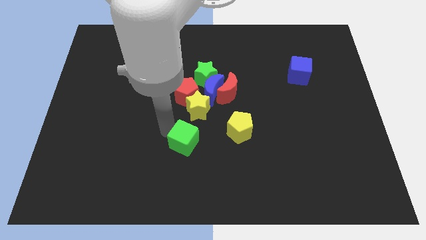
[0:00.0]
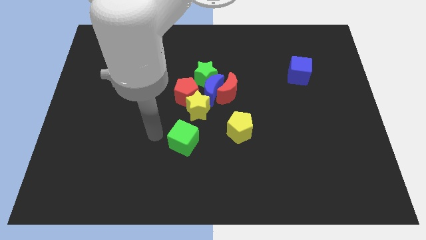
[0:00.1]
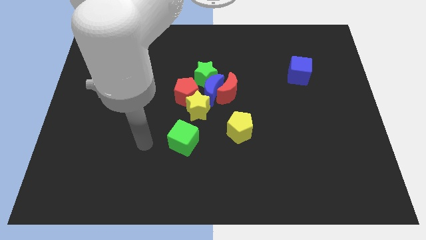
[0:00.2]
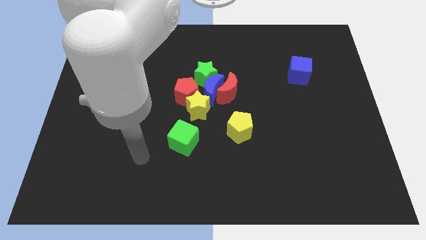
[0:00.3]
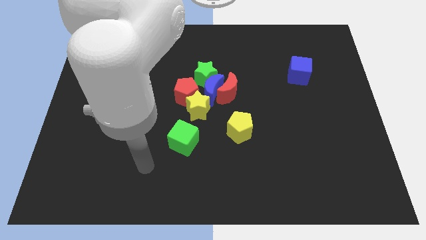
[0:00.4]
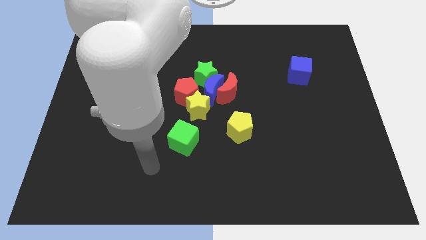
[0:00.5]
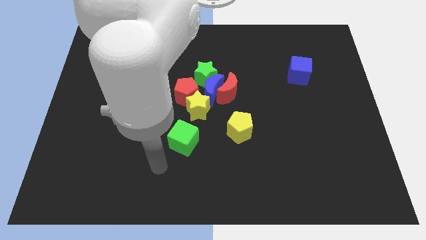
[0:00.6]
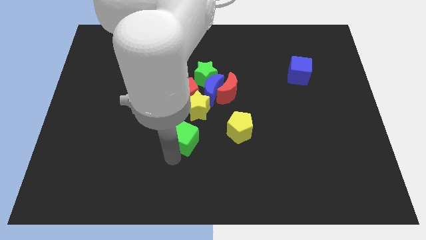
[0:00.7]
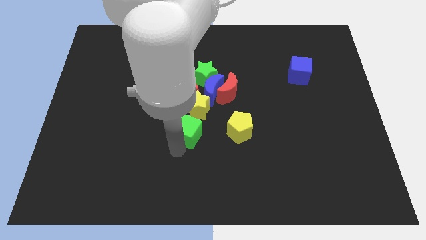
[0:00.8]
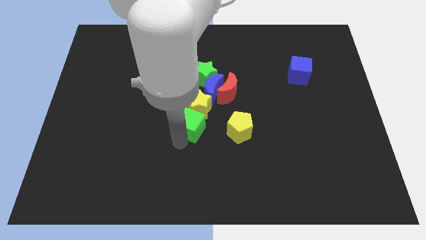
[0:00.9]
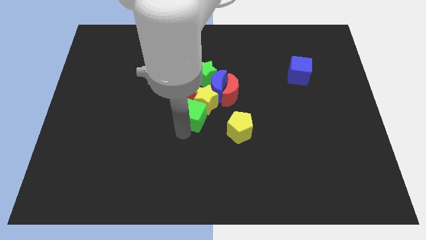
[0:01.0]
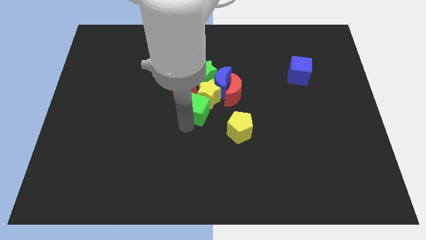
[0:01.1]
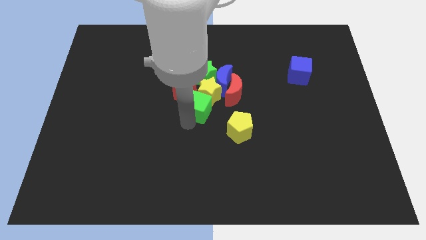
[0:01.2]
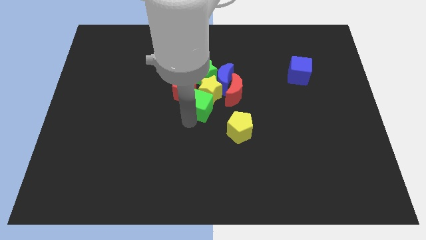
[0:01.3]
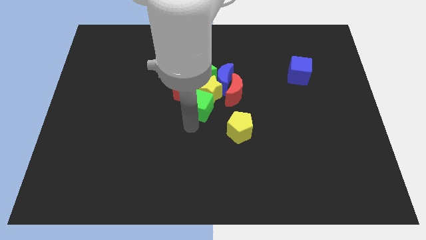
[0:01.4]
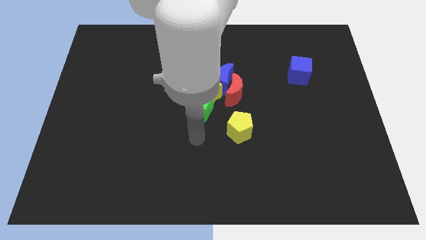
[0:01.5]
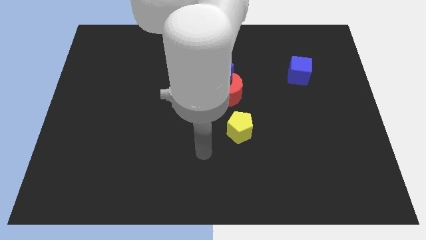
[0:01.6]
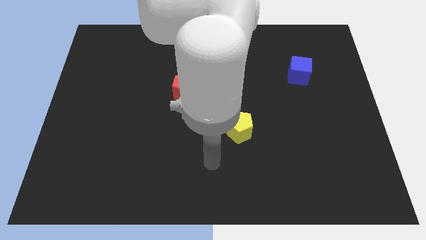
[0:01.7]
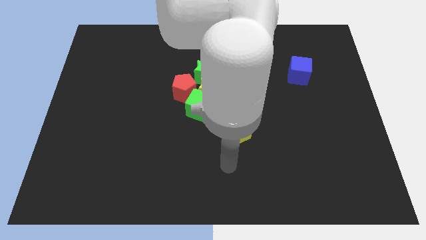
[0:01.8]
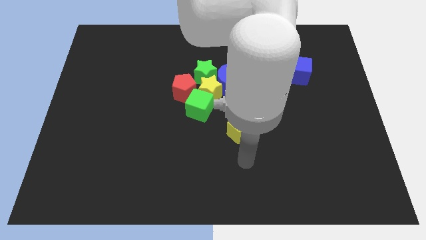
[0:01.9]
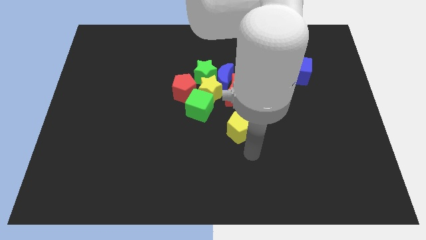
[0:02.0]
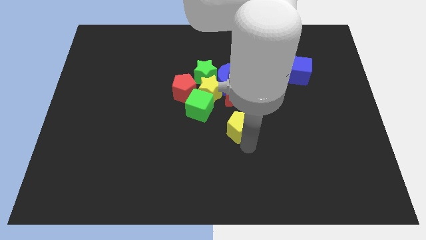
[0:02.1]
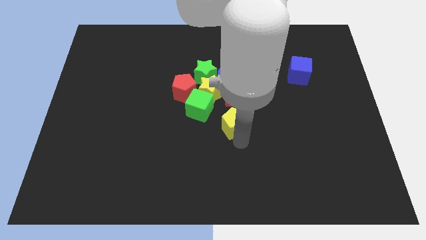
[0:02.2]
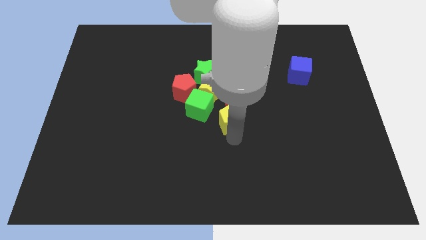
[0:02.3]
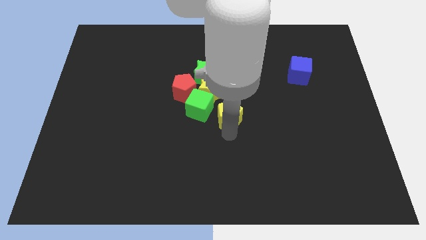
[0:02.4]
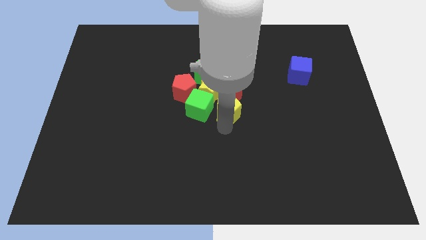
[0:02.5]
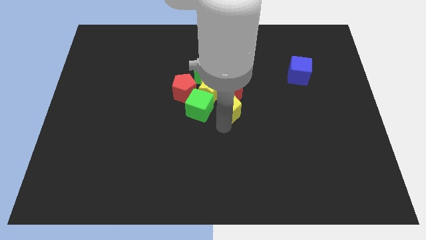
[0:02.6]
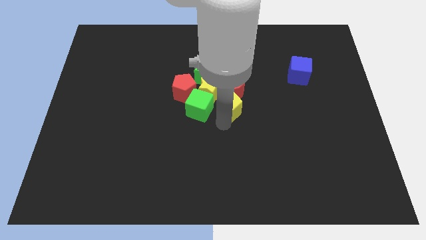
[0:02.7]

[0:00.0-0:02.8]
slide the yellow pentagon right to the green cube

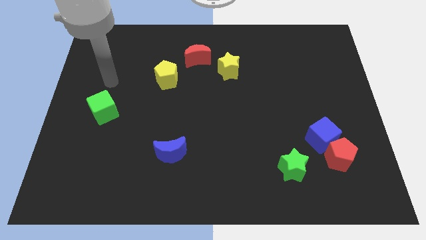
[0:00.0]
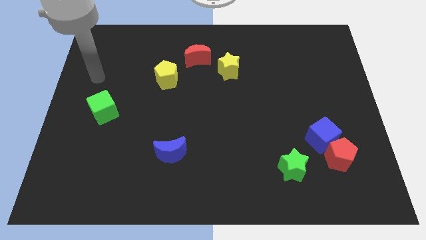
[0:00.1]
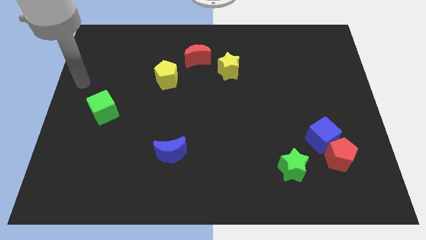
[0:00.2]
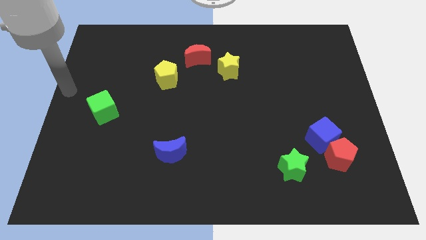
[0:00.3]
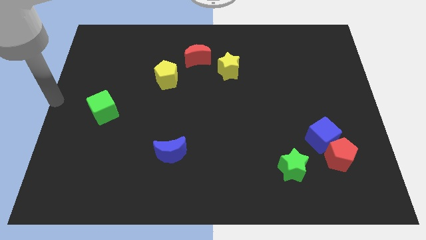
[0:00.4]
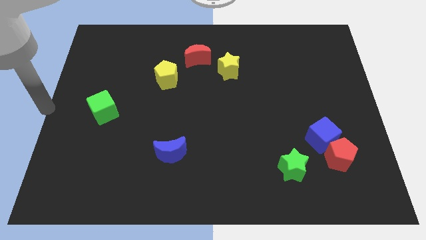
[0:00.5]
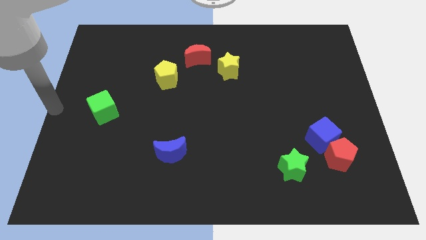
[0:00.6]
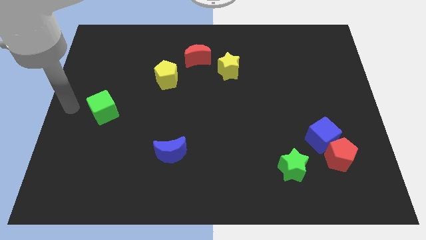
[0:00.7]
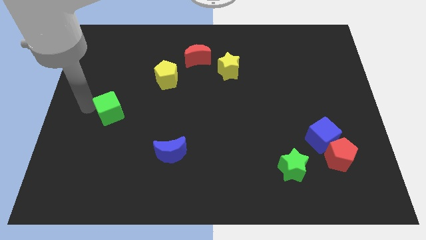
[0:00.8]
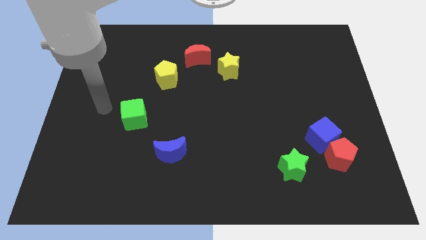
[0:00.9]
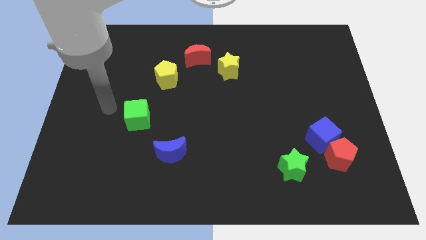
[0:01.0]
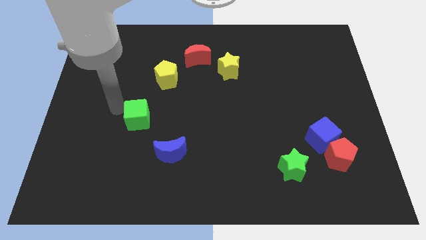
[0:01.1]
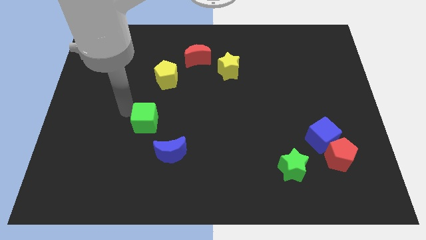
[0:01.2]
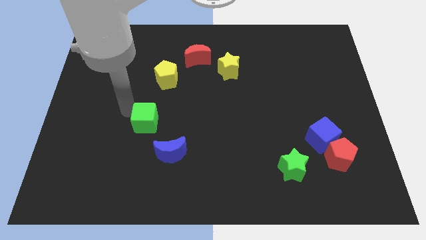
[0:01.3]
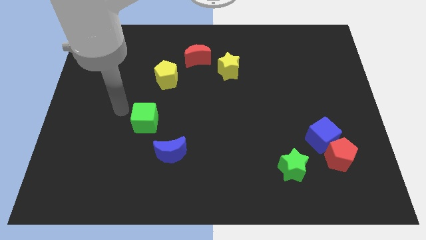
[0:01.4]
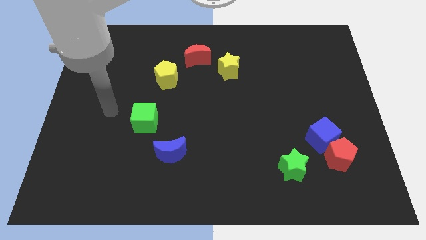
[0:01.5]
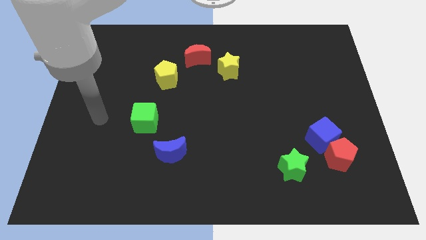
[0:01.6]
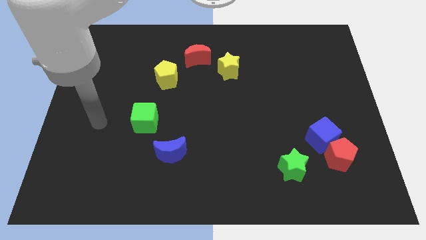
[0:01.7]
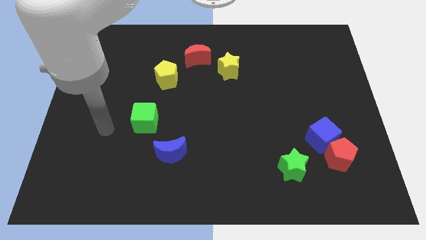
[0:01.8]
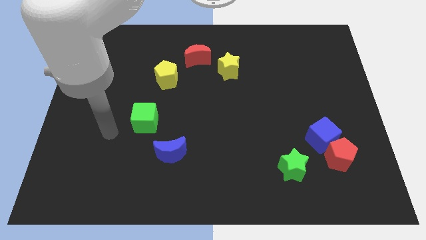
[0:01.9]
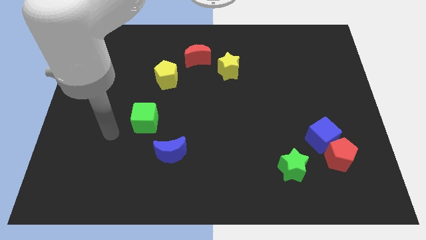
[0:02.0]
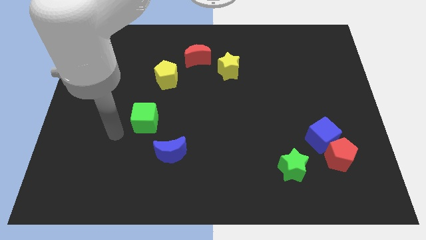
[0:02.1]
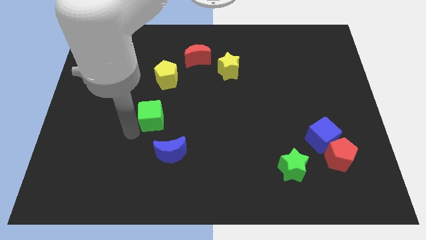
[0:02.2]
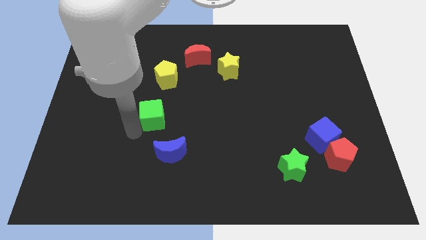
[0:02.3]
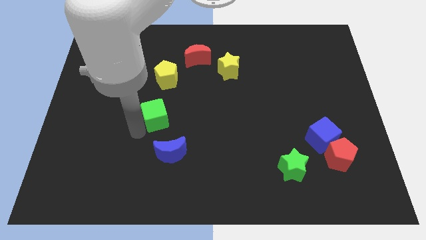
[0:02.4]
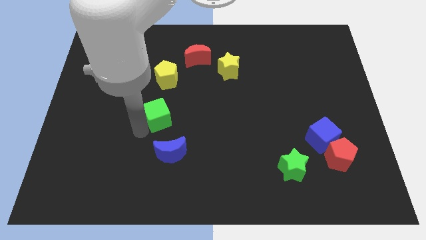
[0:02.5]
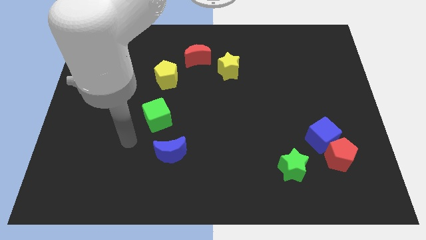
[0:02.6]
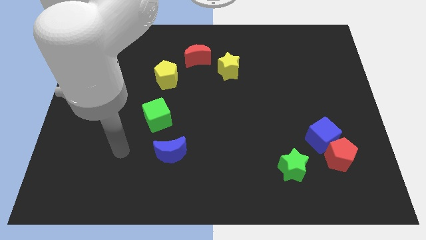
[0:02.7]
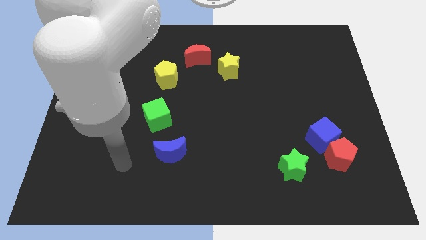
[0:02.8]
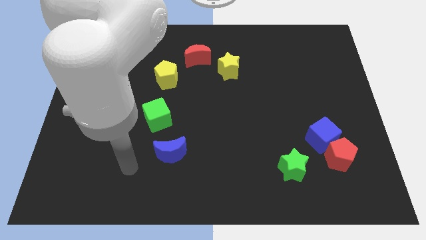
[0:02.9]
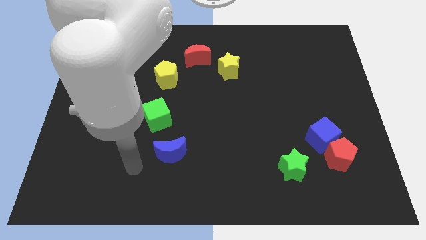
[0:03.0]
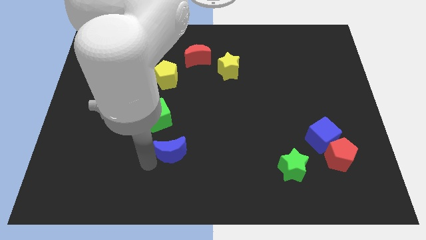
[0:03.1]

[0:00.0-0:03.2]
put the green cube vertically below the yellow pentagon

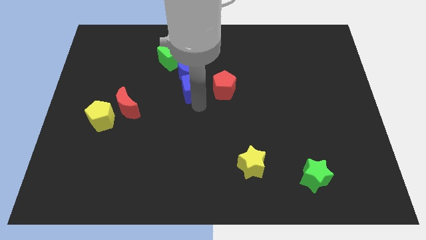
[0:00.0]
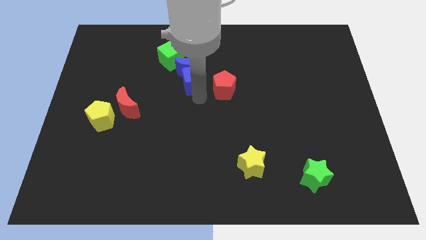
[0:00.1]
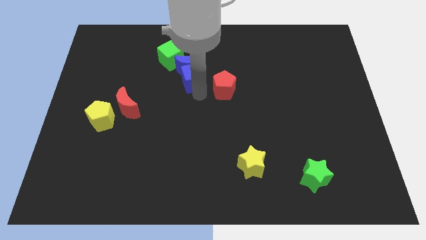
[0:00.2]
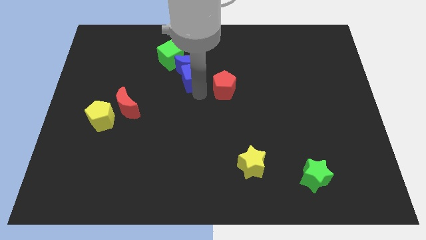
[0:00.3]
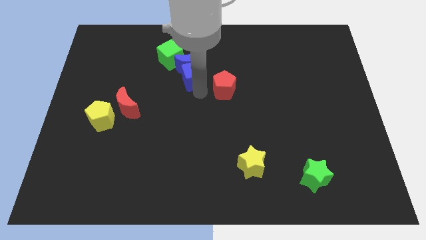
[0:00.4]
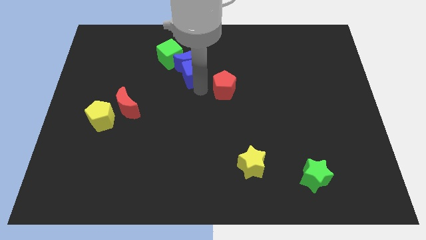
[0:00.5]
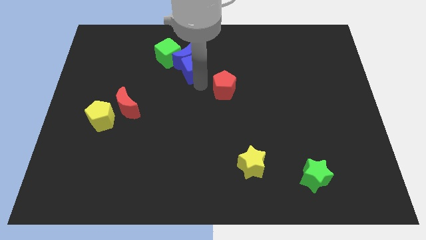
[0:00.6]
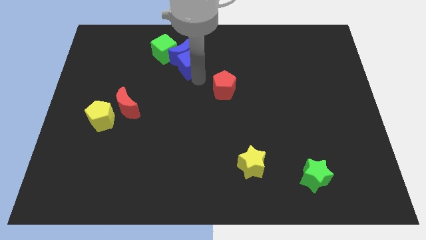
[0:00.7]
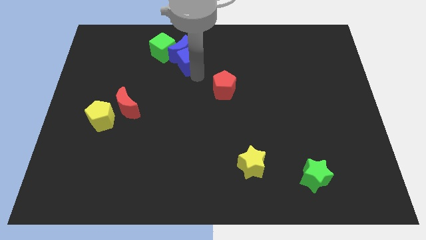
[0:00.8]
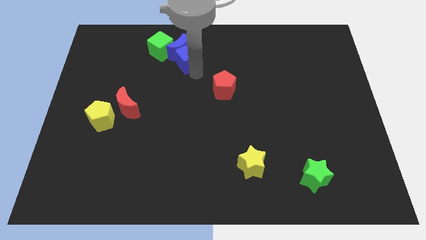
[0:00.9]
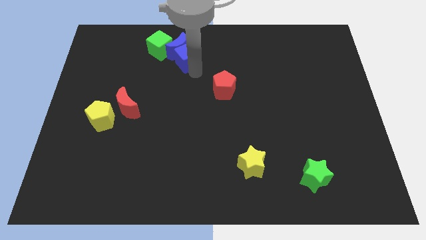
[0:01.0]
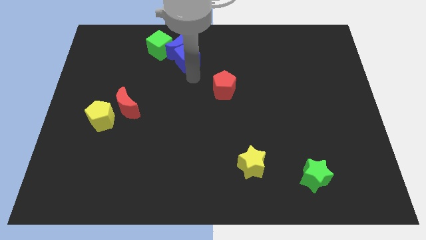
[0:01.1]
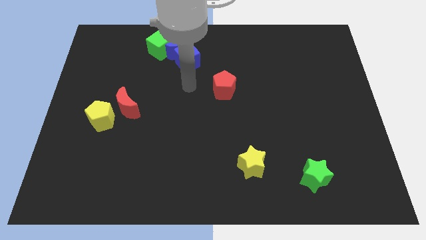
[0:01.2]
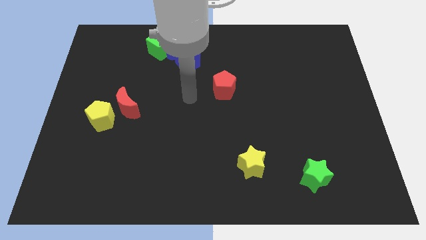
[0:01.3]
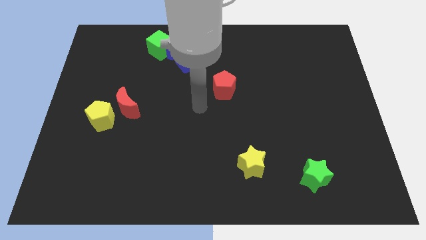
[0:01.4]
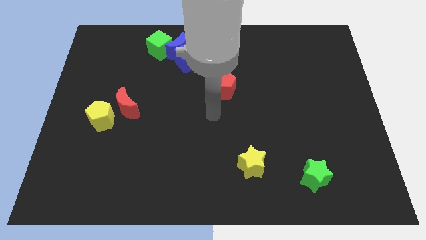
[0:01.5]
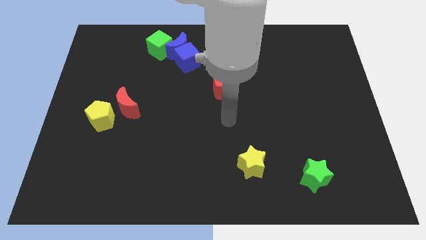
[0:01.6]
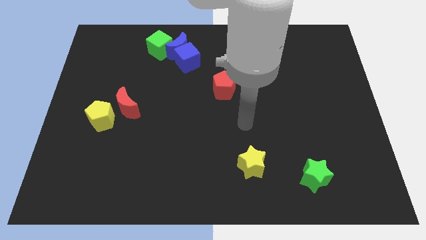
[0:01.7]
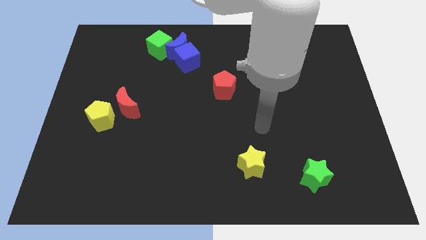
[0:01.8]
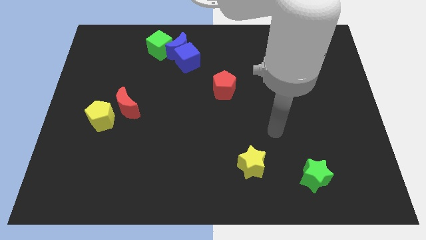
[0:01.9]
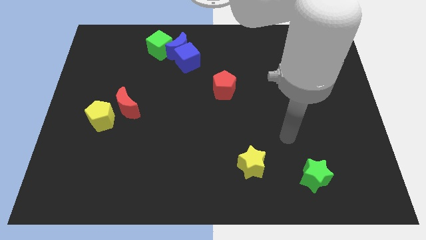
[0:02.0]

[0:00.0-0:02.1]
place your arm left above the green star

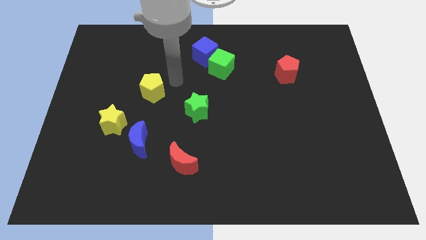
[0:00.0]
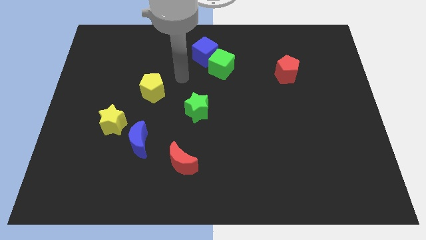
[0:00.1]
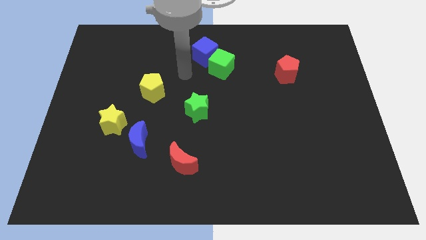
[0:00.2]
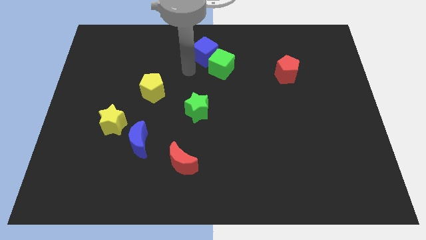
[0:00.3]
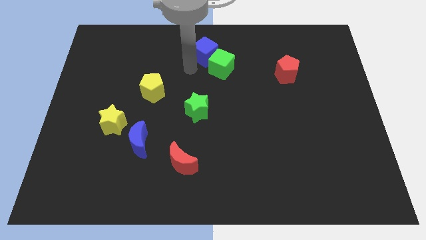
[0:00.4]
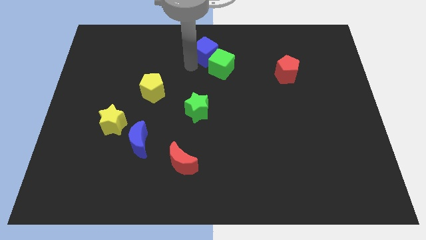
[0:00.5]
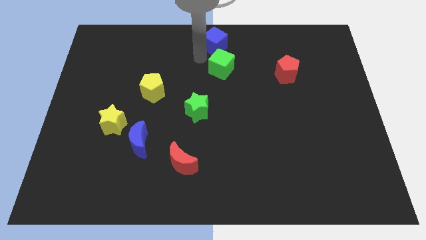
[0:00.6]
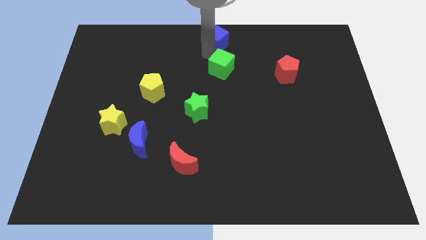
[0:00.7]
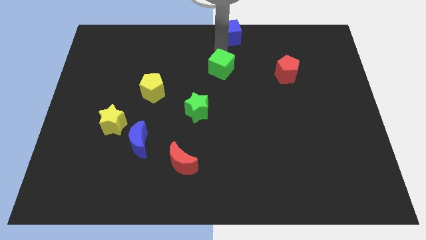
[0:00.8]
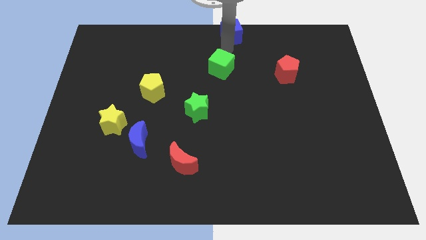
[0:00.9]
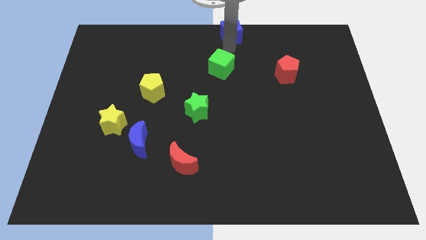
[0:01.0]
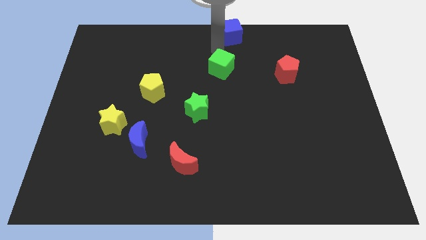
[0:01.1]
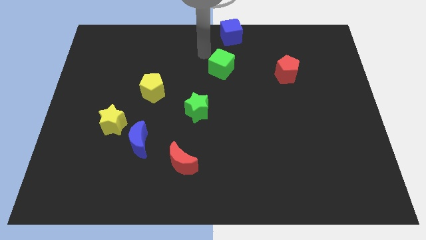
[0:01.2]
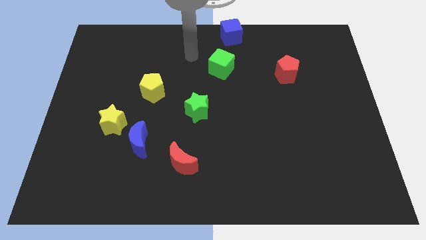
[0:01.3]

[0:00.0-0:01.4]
move the blue cube to the top right of the green cube
